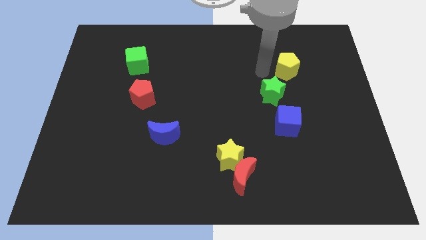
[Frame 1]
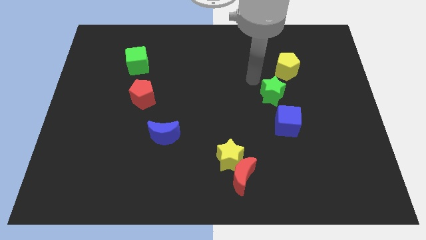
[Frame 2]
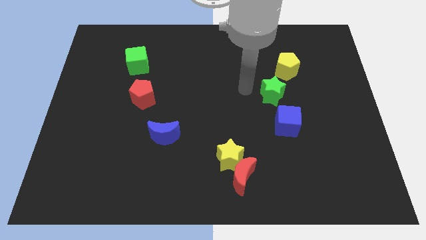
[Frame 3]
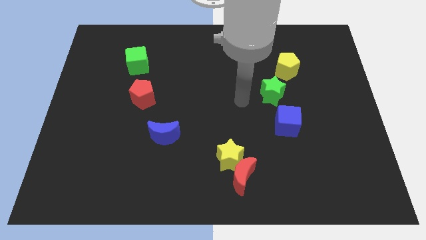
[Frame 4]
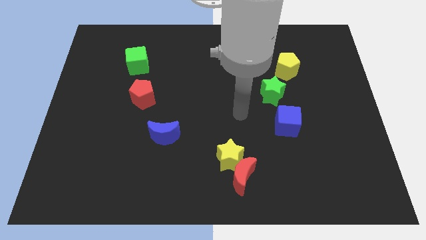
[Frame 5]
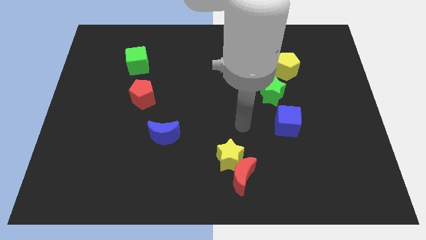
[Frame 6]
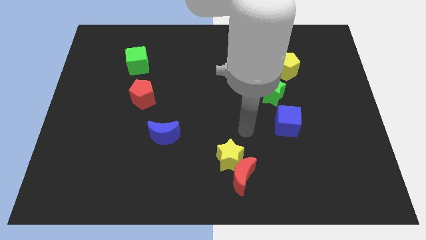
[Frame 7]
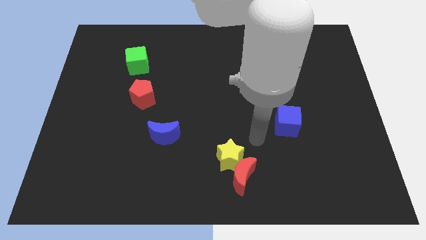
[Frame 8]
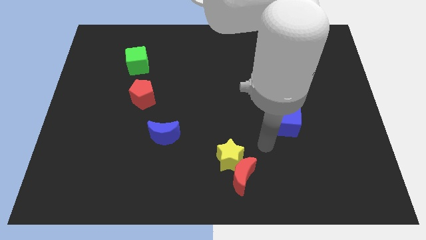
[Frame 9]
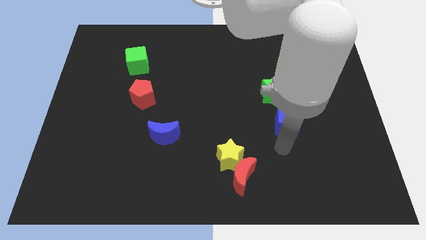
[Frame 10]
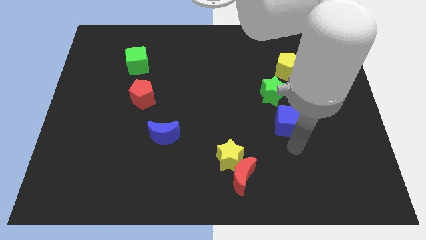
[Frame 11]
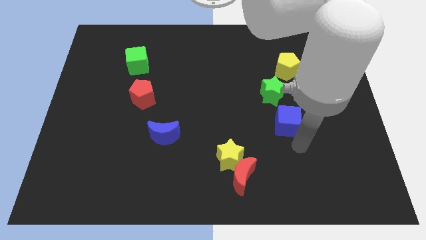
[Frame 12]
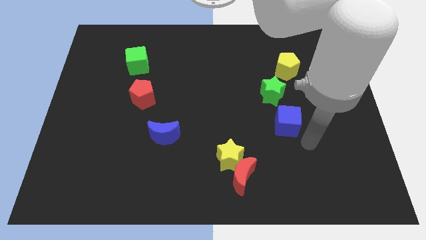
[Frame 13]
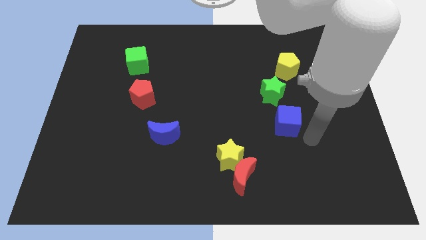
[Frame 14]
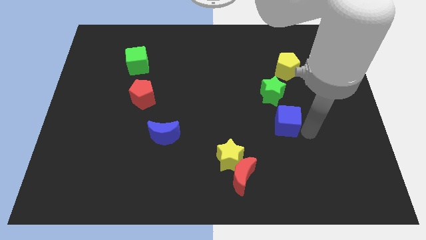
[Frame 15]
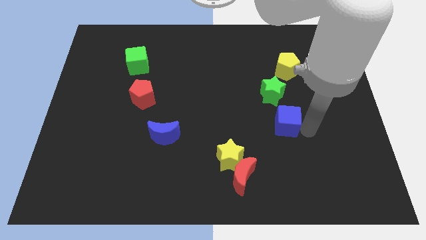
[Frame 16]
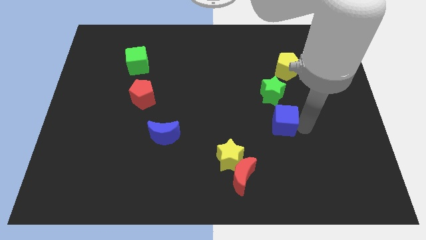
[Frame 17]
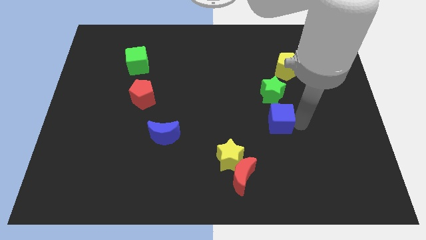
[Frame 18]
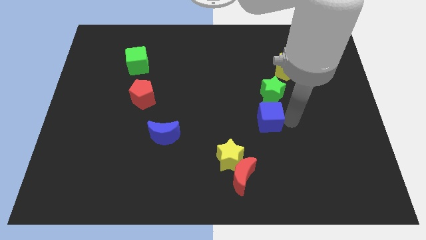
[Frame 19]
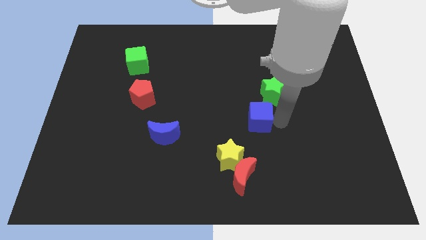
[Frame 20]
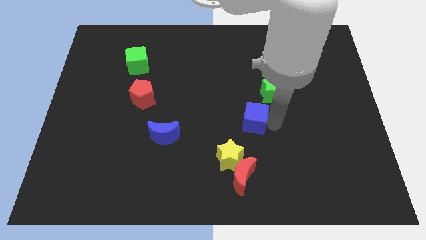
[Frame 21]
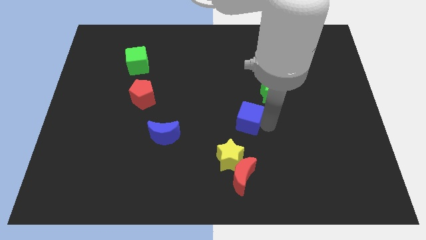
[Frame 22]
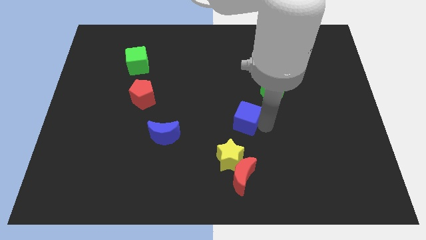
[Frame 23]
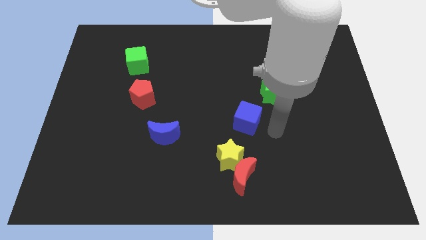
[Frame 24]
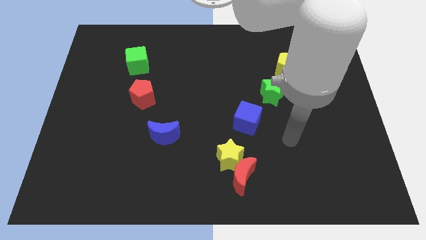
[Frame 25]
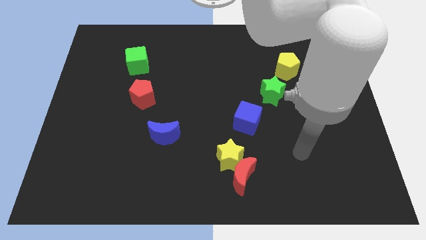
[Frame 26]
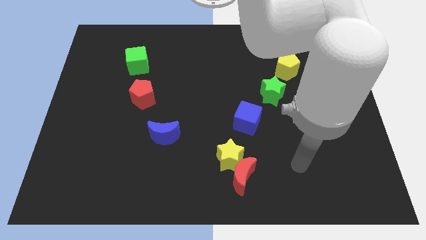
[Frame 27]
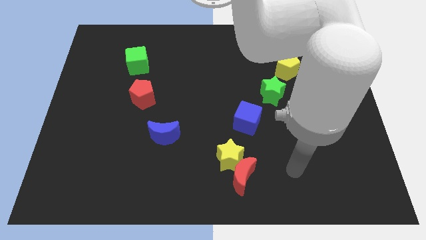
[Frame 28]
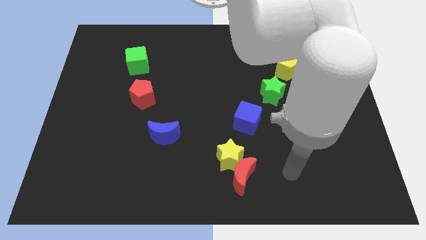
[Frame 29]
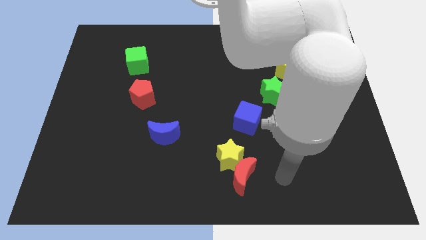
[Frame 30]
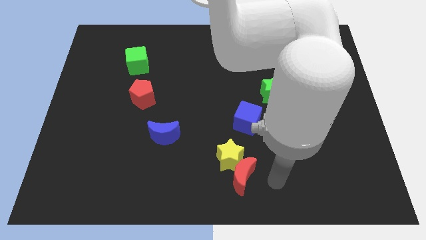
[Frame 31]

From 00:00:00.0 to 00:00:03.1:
move the blue cube to the center of the board

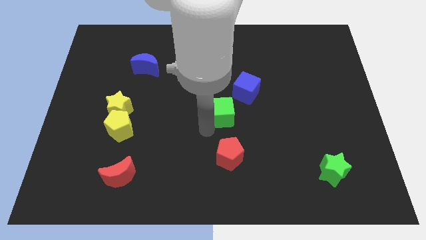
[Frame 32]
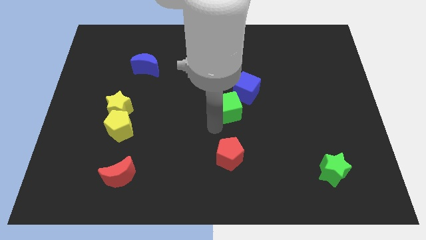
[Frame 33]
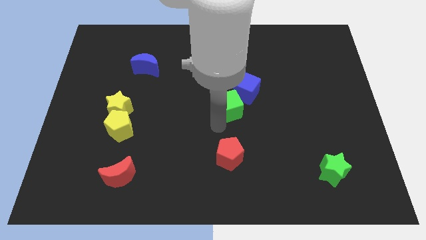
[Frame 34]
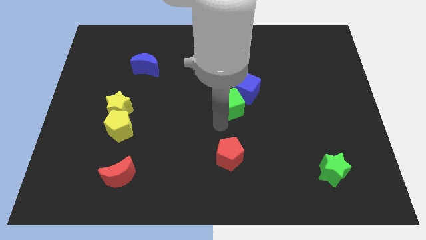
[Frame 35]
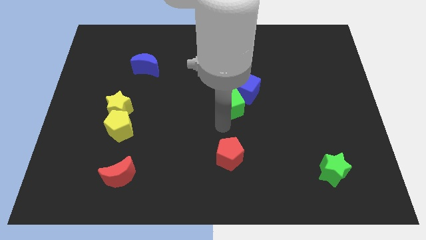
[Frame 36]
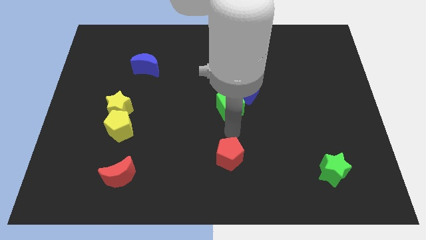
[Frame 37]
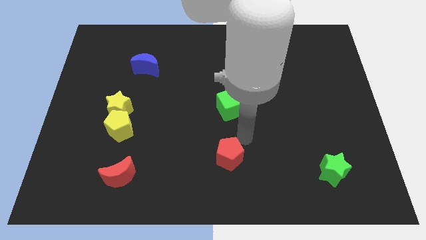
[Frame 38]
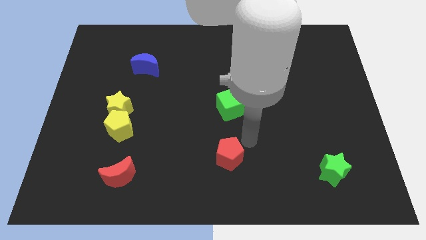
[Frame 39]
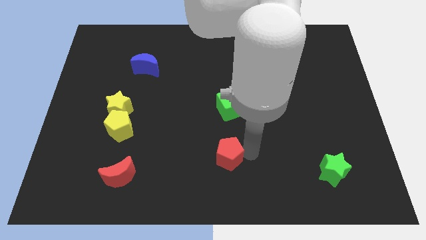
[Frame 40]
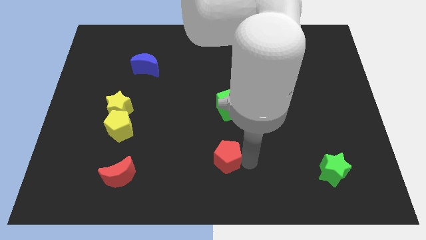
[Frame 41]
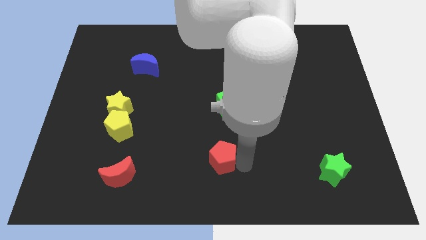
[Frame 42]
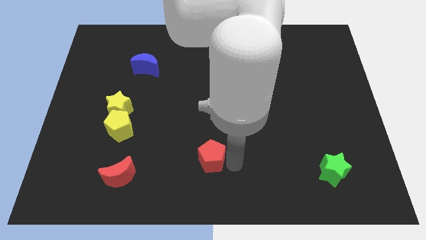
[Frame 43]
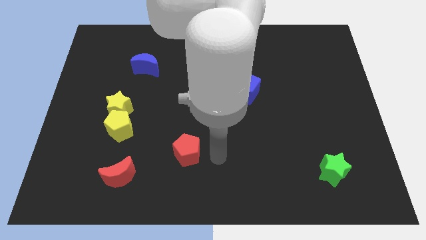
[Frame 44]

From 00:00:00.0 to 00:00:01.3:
push the green cube and the red pentagon diagonal to each other

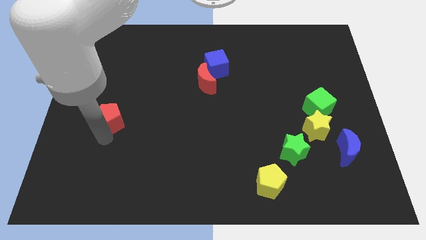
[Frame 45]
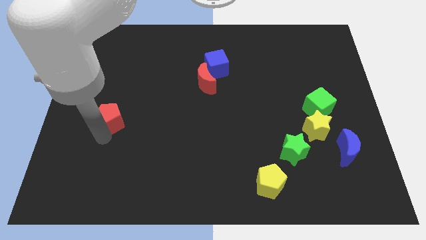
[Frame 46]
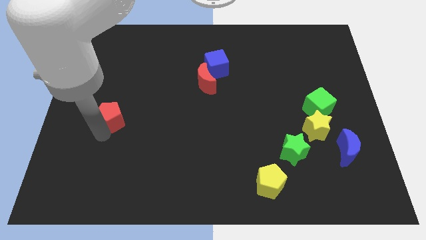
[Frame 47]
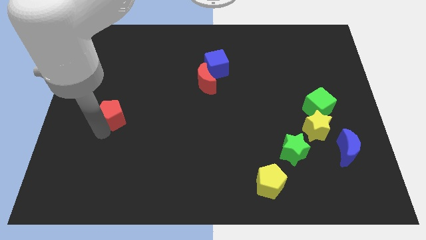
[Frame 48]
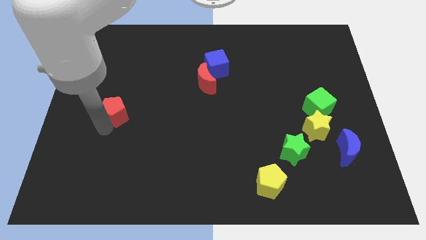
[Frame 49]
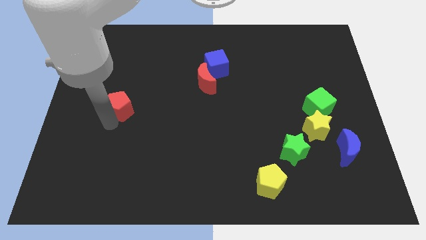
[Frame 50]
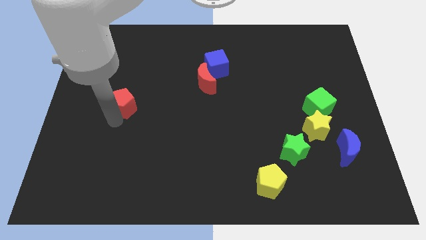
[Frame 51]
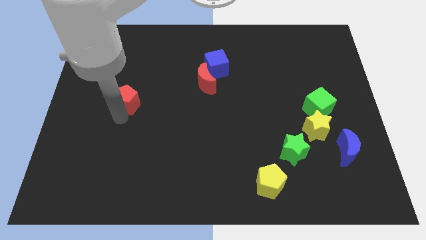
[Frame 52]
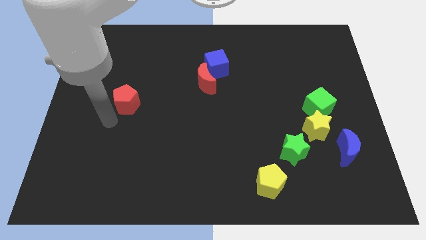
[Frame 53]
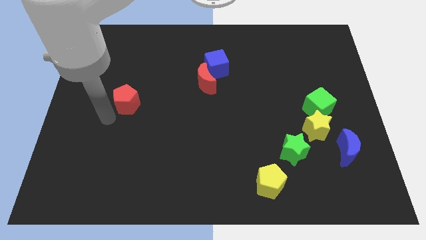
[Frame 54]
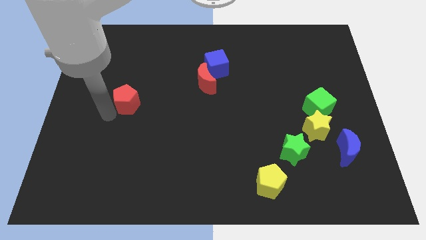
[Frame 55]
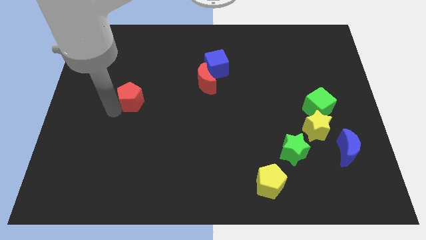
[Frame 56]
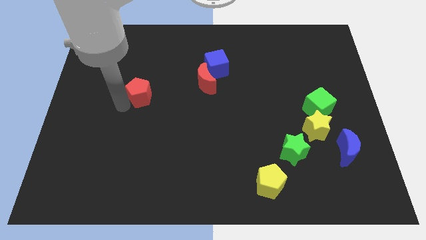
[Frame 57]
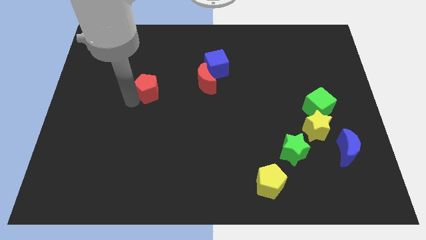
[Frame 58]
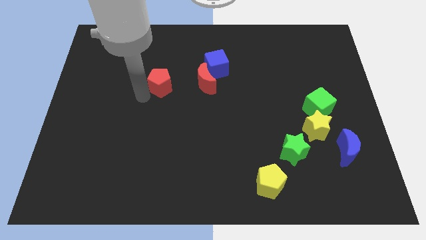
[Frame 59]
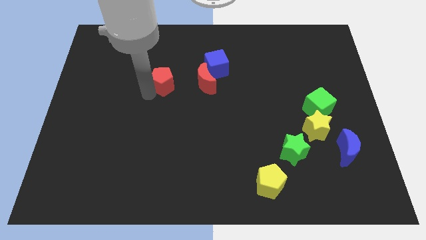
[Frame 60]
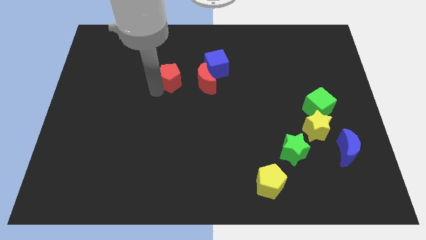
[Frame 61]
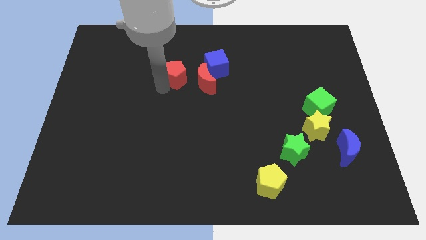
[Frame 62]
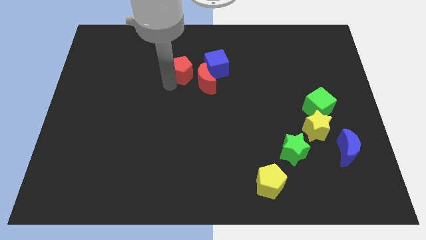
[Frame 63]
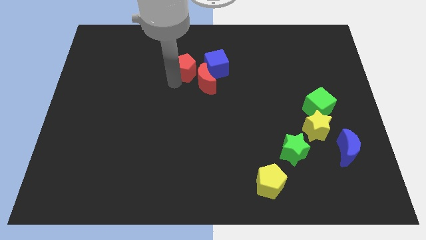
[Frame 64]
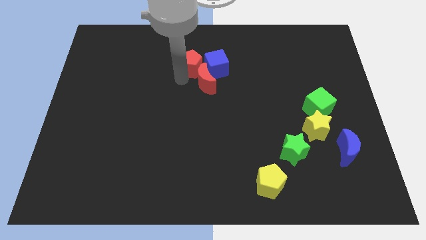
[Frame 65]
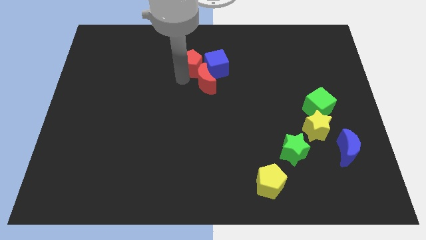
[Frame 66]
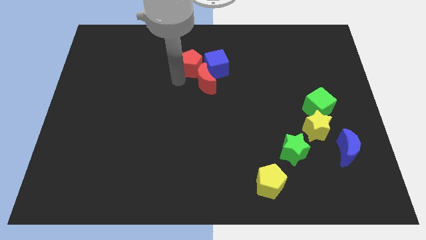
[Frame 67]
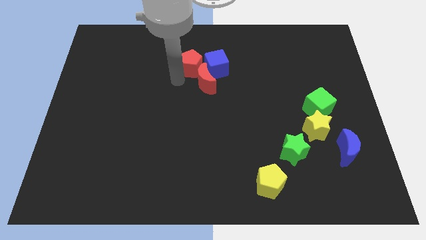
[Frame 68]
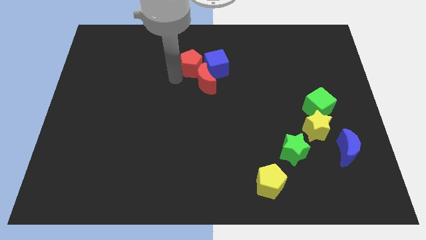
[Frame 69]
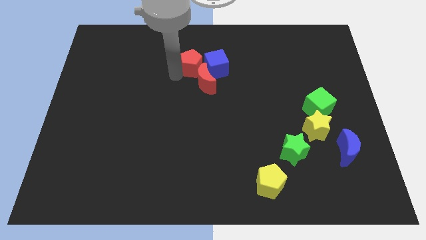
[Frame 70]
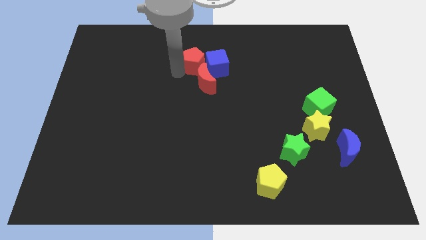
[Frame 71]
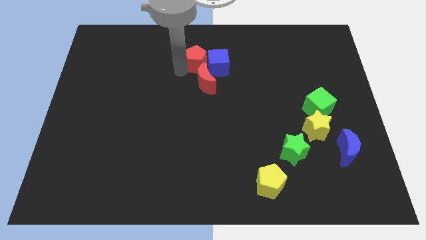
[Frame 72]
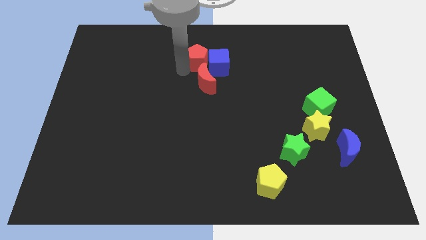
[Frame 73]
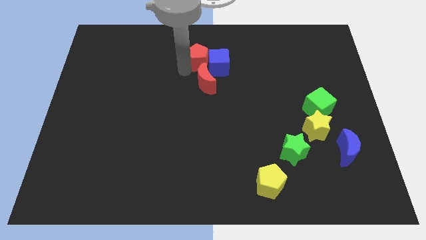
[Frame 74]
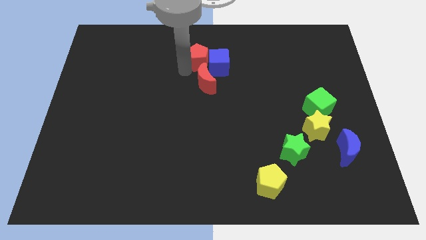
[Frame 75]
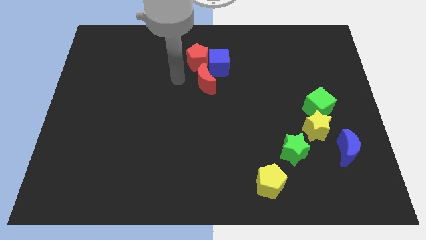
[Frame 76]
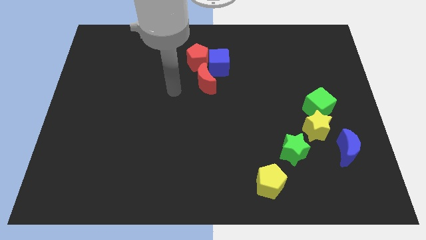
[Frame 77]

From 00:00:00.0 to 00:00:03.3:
push the red pentagon into the blue cube

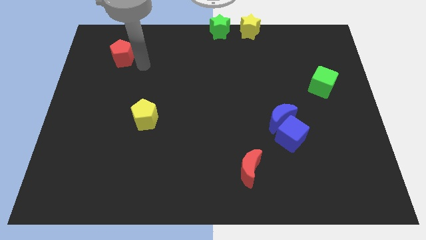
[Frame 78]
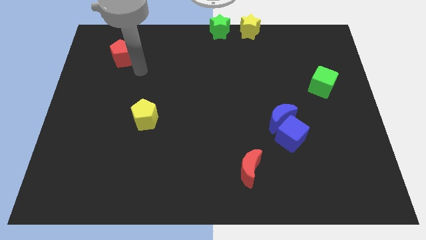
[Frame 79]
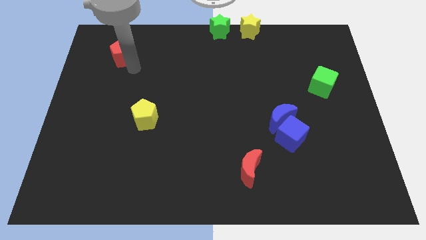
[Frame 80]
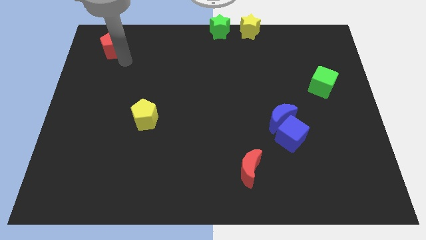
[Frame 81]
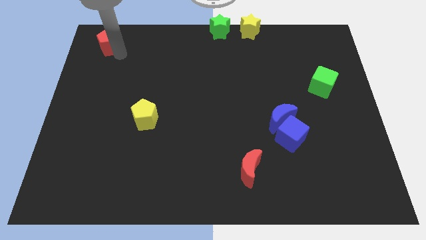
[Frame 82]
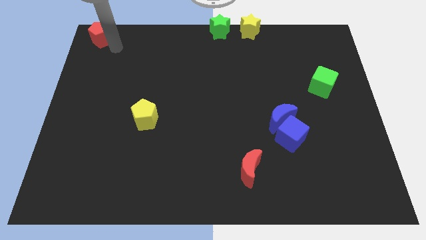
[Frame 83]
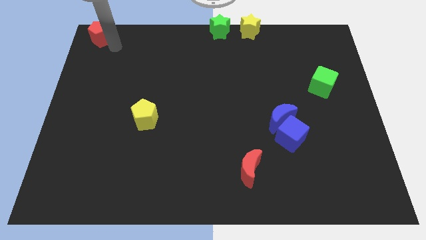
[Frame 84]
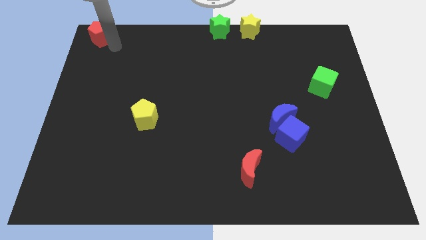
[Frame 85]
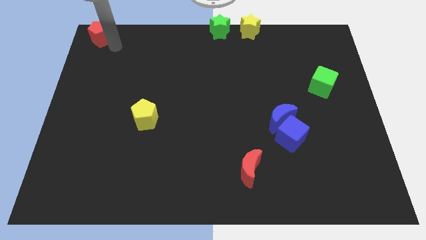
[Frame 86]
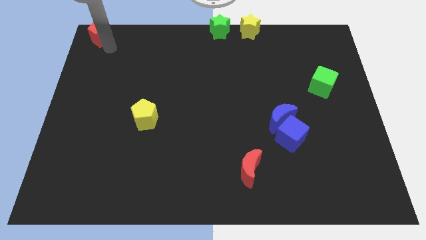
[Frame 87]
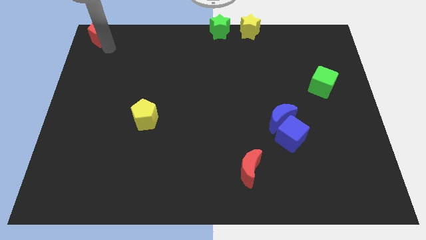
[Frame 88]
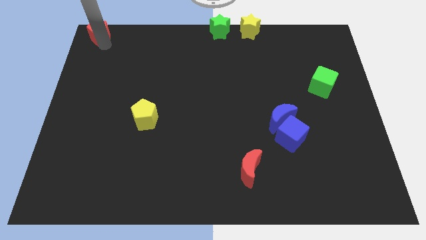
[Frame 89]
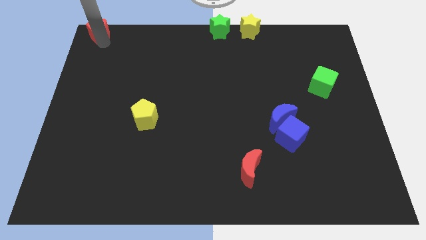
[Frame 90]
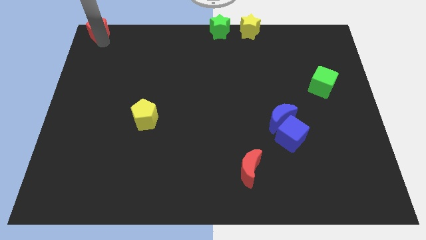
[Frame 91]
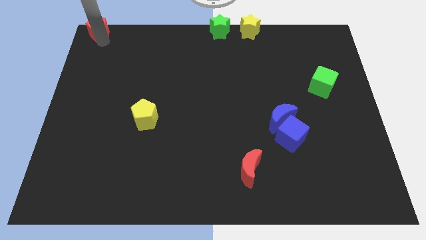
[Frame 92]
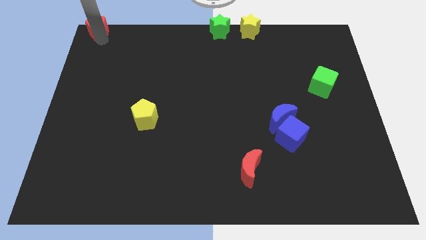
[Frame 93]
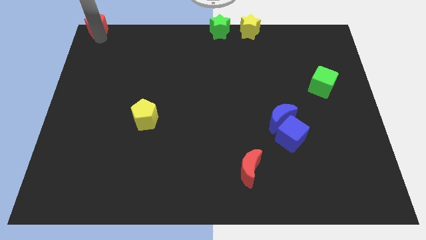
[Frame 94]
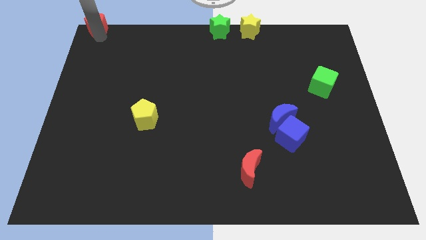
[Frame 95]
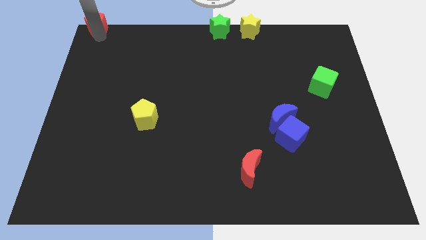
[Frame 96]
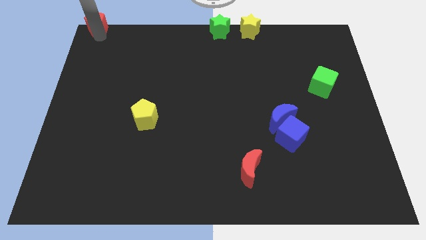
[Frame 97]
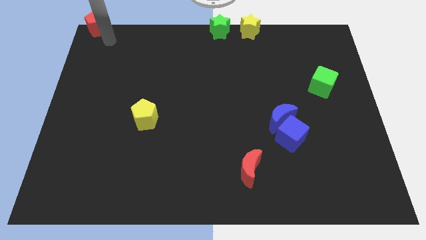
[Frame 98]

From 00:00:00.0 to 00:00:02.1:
put the red pentagon to the top left corner
